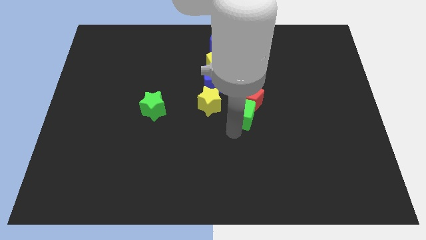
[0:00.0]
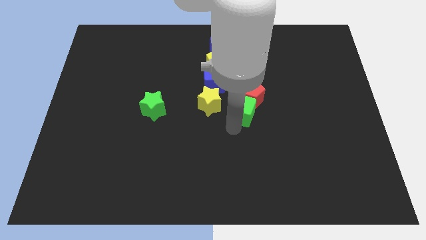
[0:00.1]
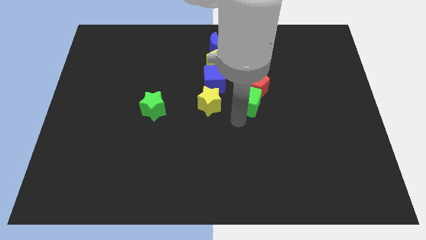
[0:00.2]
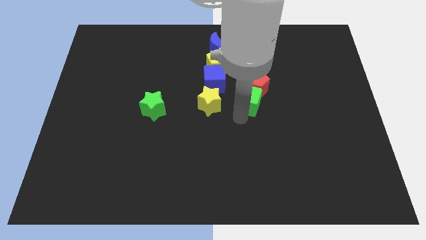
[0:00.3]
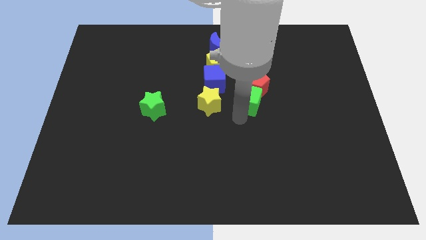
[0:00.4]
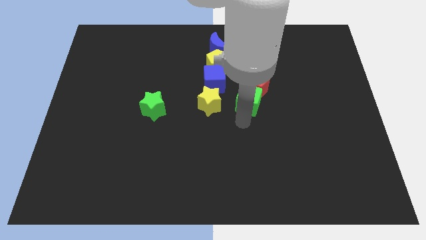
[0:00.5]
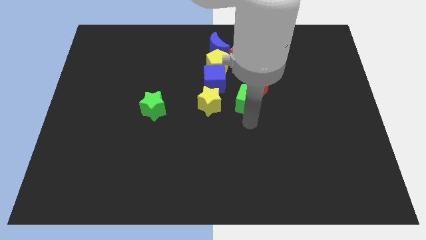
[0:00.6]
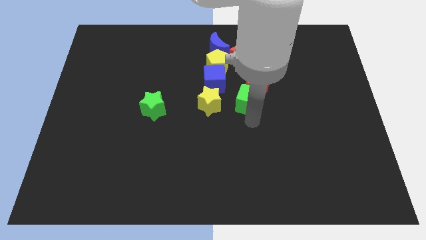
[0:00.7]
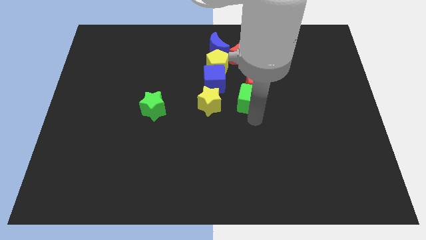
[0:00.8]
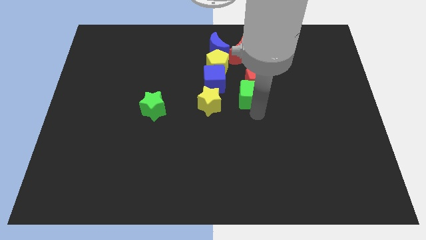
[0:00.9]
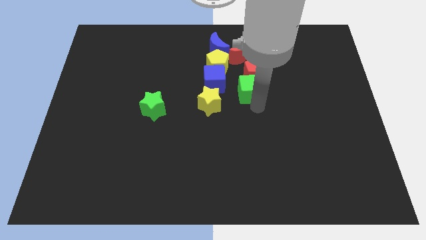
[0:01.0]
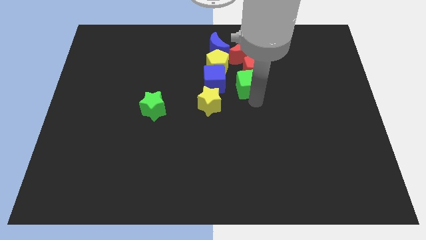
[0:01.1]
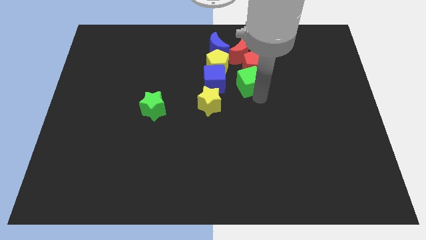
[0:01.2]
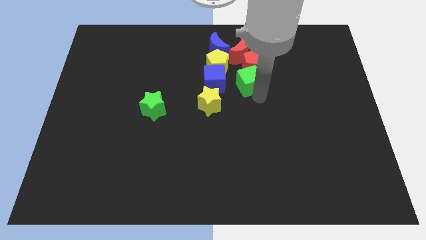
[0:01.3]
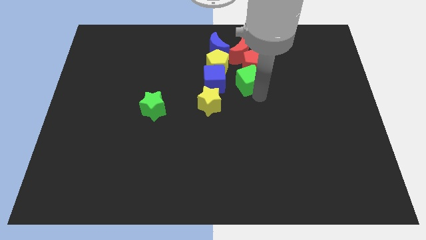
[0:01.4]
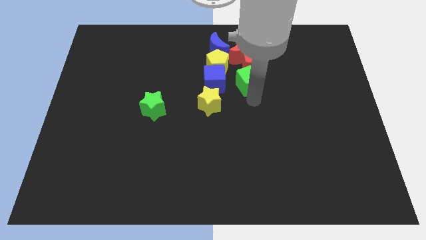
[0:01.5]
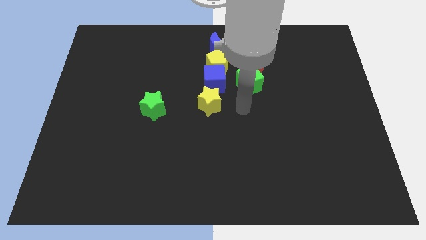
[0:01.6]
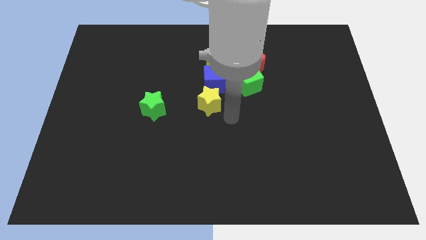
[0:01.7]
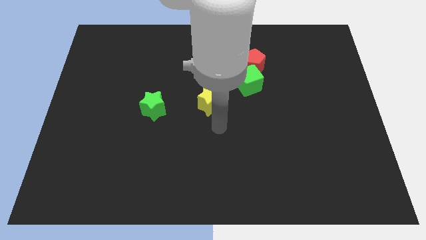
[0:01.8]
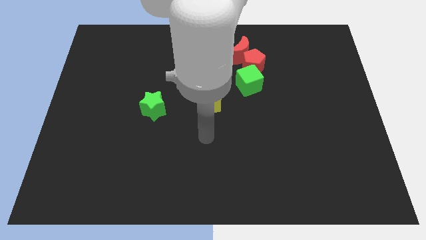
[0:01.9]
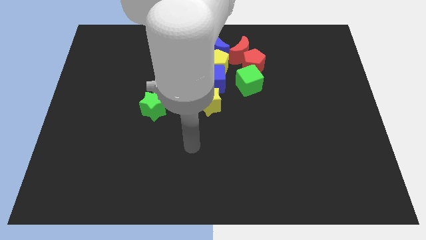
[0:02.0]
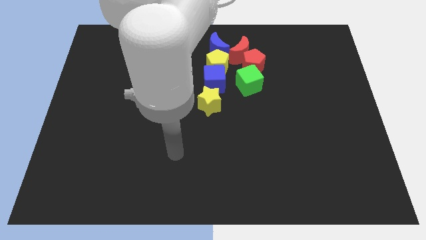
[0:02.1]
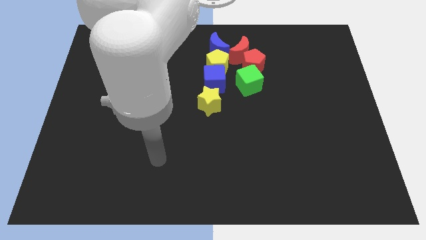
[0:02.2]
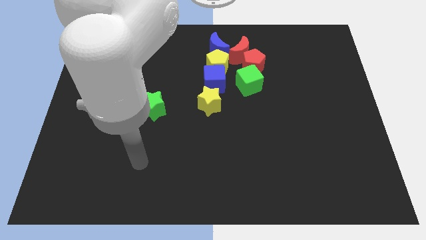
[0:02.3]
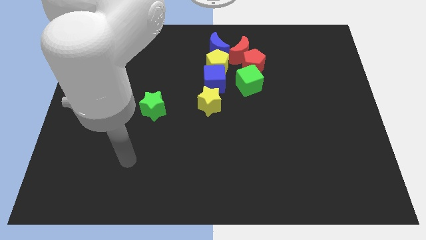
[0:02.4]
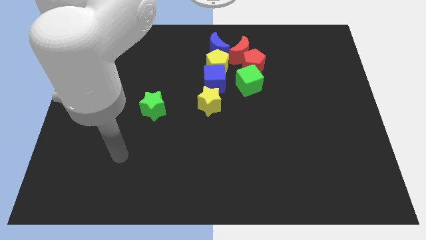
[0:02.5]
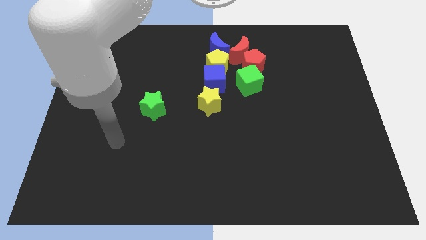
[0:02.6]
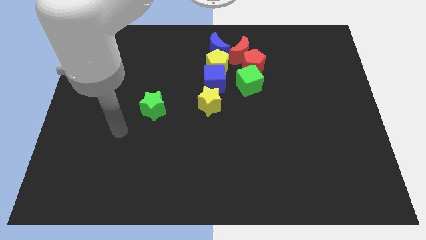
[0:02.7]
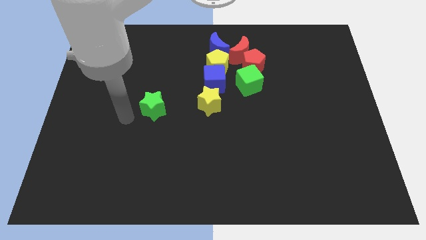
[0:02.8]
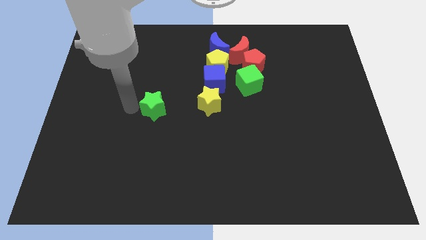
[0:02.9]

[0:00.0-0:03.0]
push the red pentagon and green cube to the upward

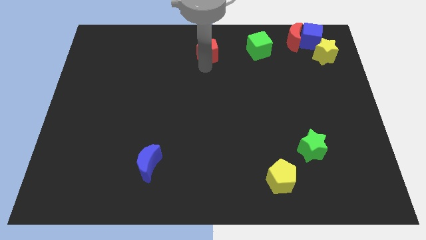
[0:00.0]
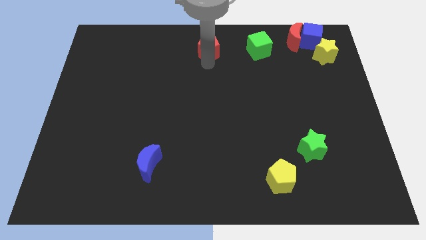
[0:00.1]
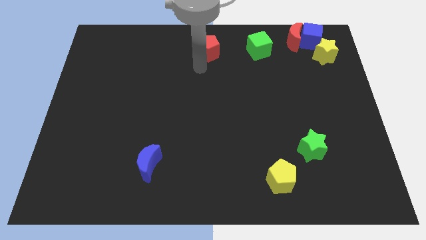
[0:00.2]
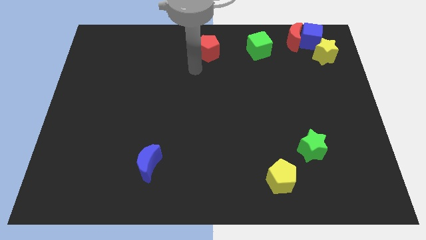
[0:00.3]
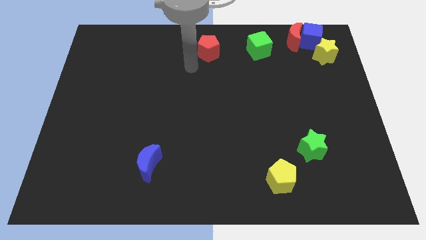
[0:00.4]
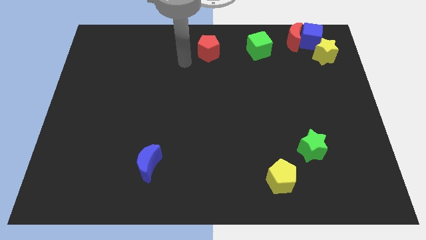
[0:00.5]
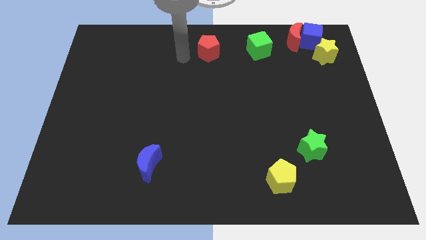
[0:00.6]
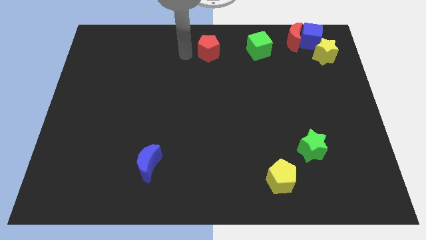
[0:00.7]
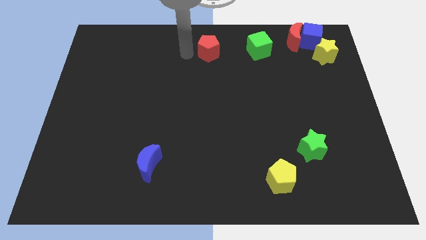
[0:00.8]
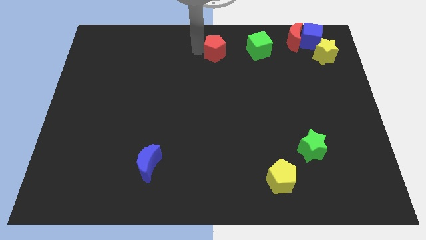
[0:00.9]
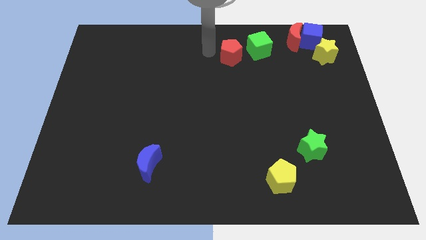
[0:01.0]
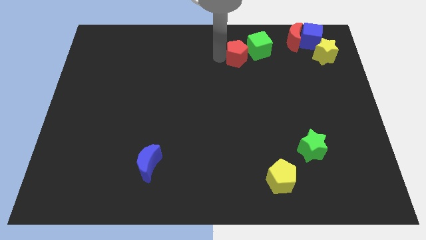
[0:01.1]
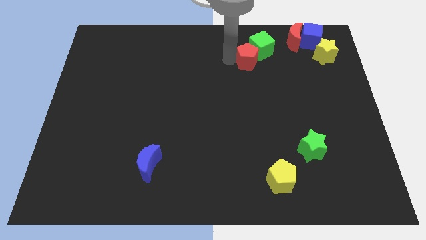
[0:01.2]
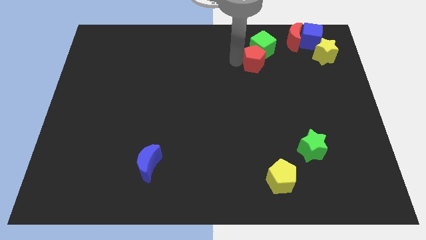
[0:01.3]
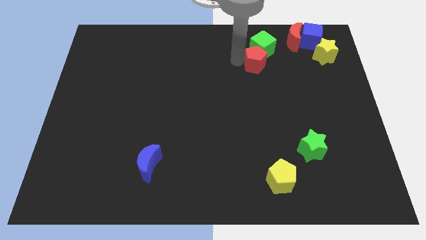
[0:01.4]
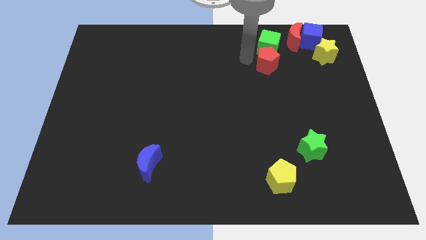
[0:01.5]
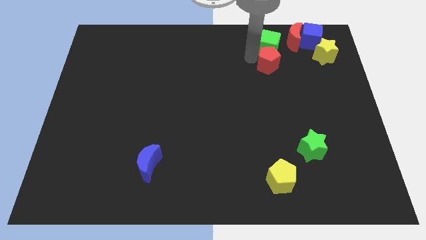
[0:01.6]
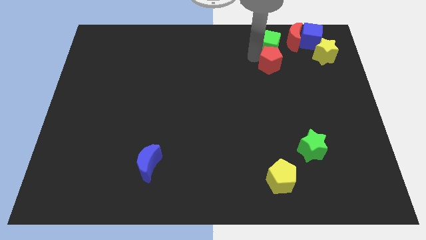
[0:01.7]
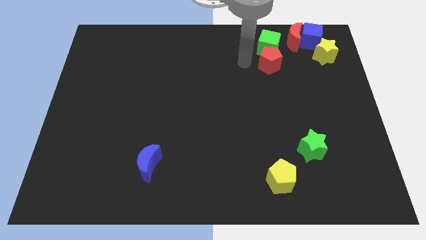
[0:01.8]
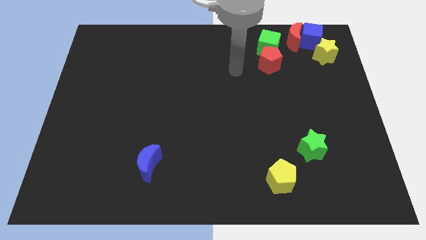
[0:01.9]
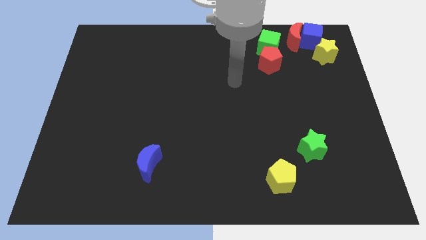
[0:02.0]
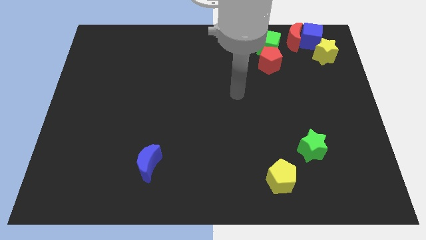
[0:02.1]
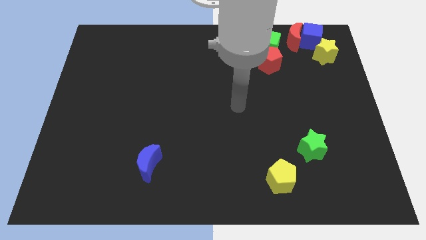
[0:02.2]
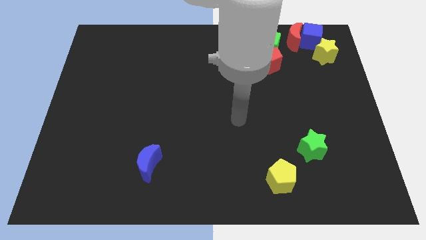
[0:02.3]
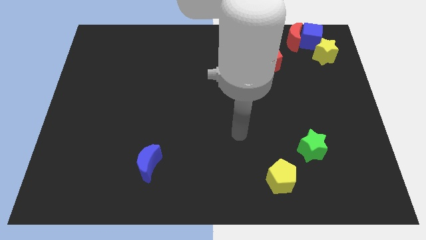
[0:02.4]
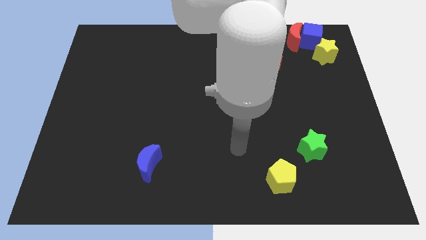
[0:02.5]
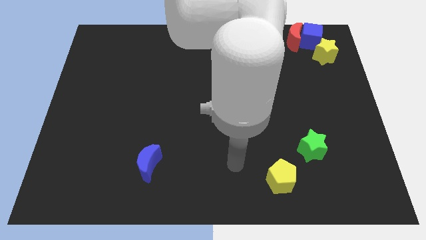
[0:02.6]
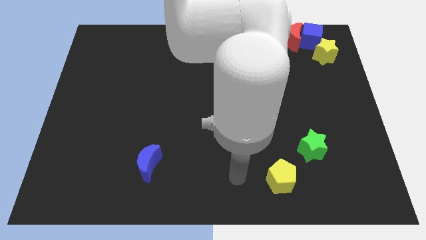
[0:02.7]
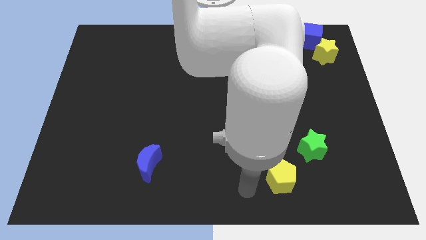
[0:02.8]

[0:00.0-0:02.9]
move red pentagon below the green cube

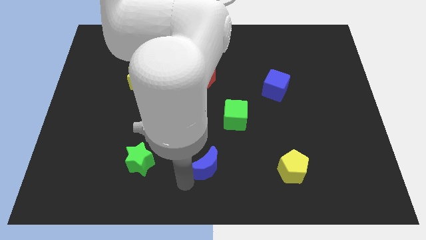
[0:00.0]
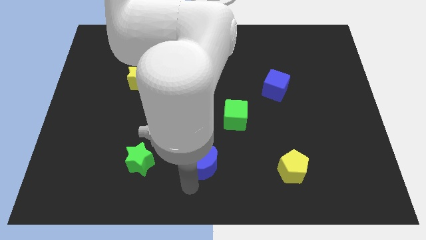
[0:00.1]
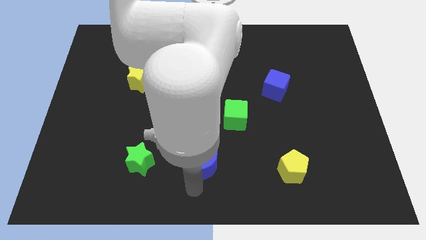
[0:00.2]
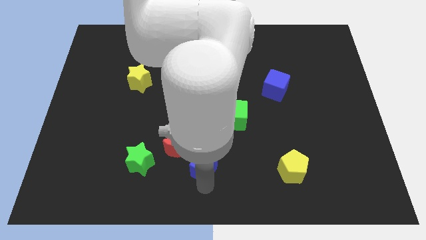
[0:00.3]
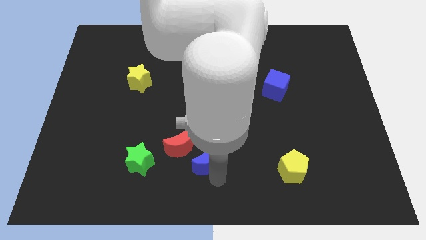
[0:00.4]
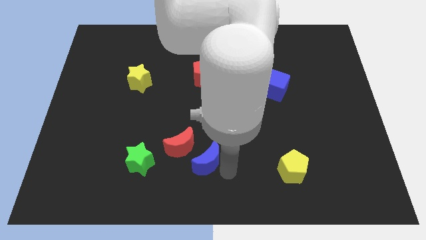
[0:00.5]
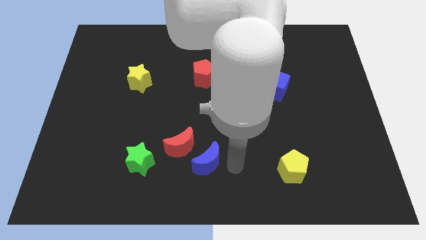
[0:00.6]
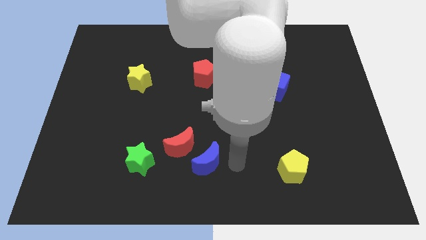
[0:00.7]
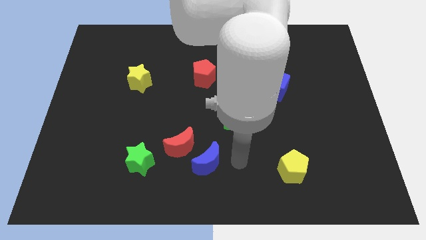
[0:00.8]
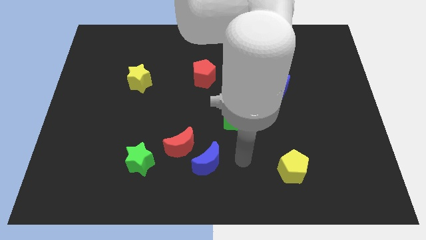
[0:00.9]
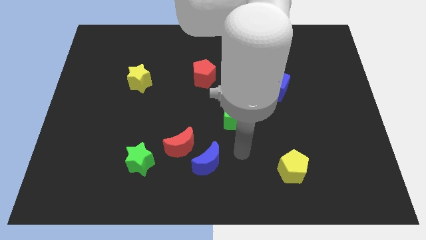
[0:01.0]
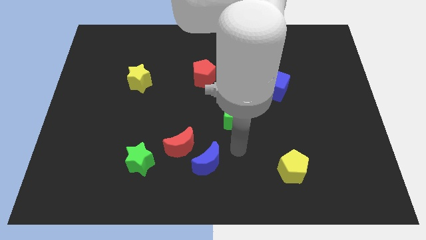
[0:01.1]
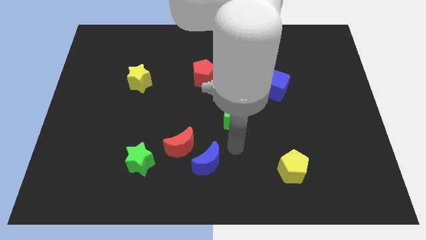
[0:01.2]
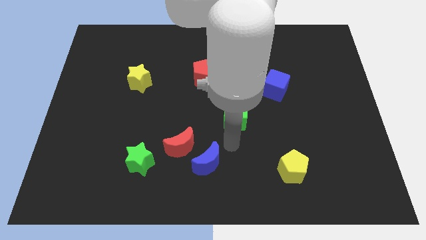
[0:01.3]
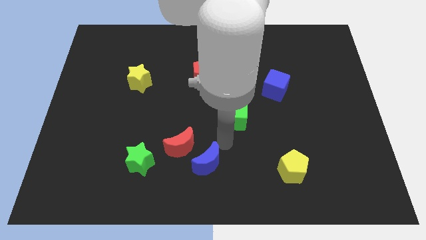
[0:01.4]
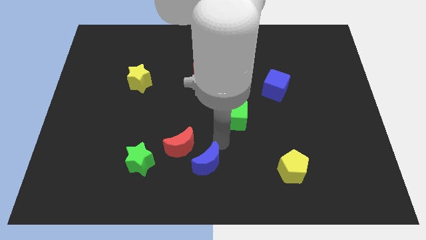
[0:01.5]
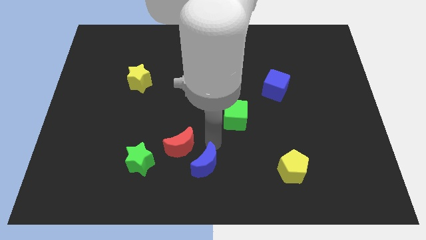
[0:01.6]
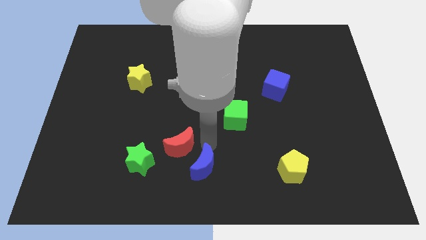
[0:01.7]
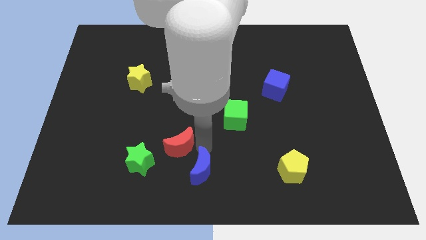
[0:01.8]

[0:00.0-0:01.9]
push blue crescent slightly towards the red crescent

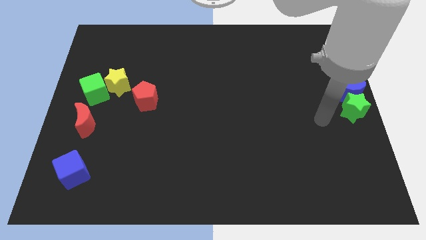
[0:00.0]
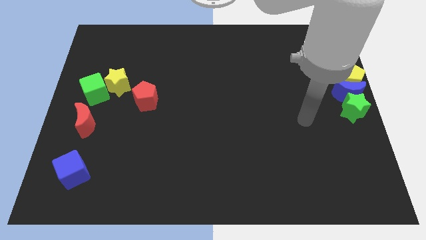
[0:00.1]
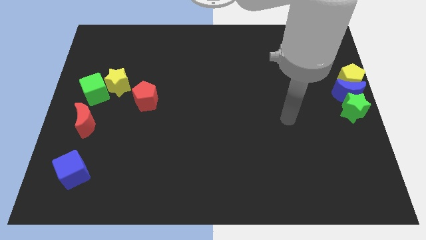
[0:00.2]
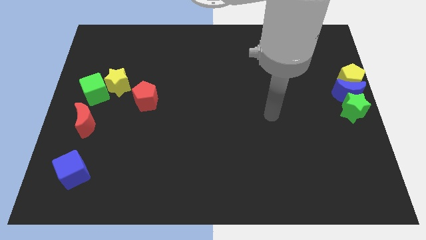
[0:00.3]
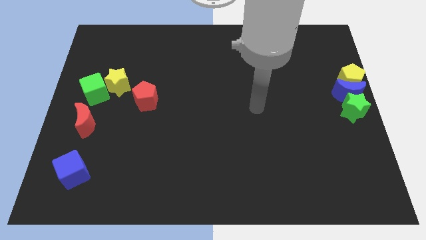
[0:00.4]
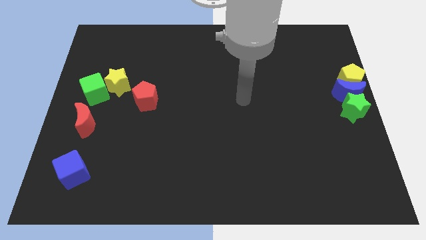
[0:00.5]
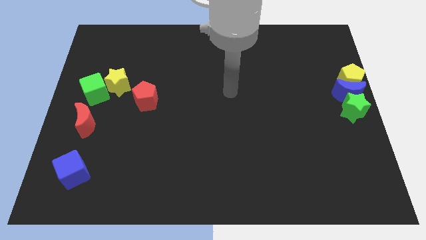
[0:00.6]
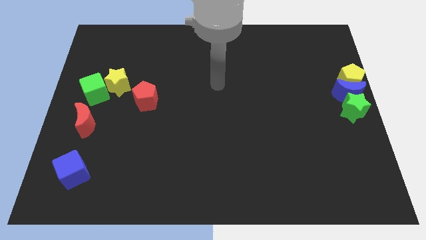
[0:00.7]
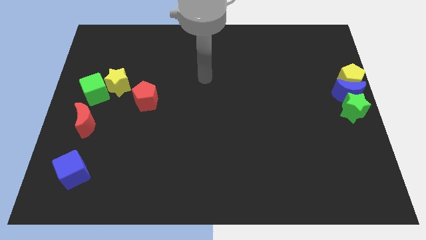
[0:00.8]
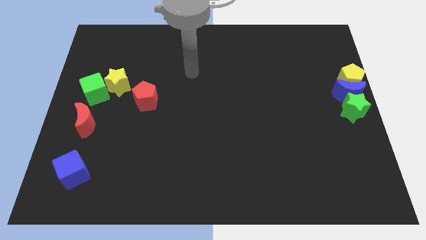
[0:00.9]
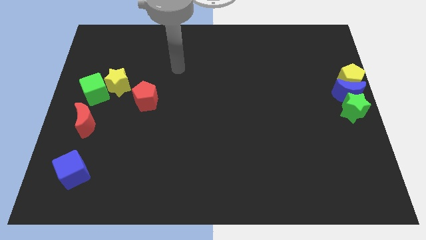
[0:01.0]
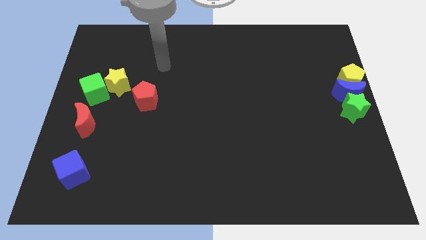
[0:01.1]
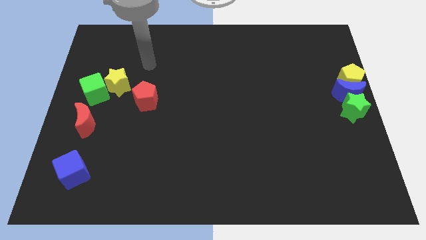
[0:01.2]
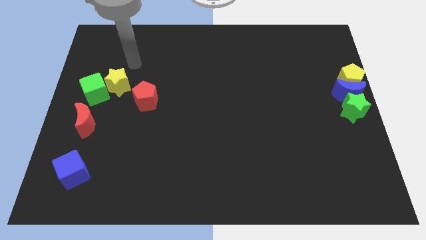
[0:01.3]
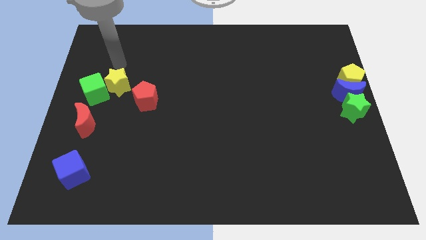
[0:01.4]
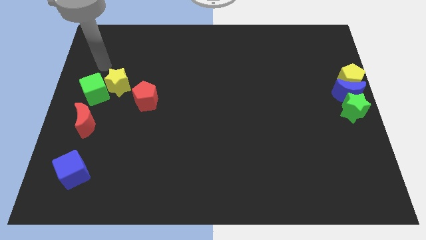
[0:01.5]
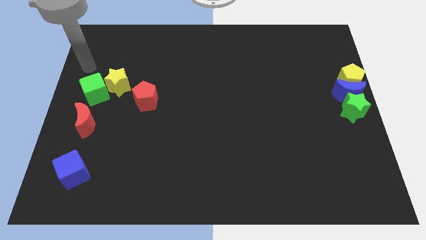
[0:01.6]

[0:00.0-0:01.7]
place your arm vertically above the green cube
